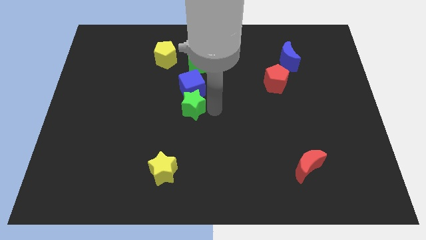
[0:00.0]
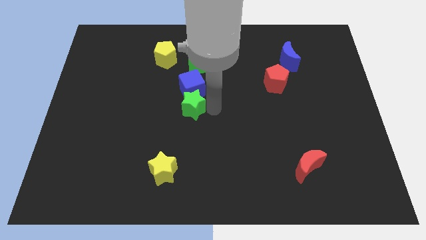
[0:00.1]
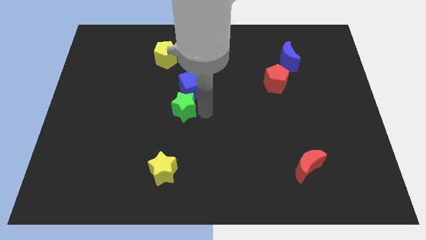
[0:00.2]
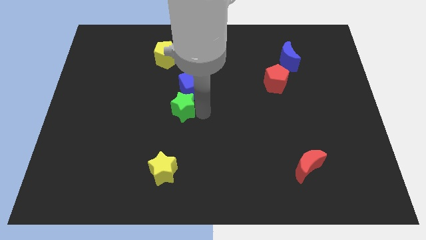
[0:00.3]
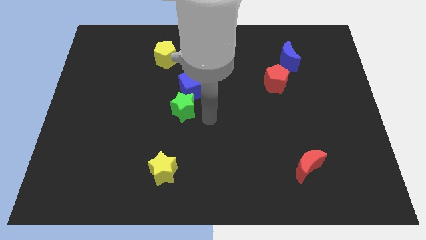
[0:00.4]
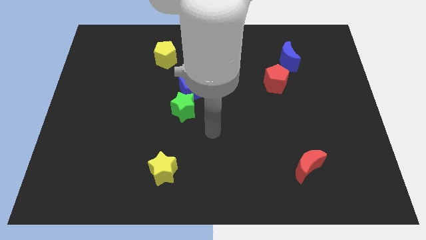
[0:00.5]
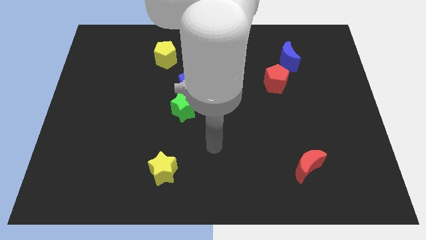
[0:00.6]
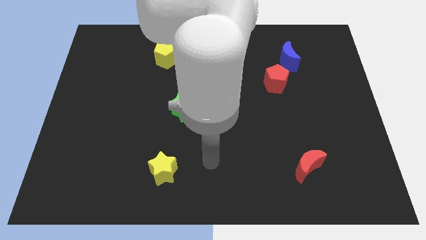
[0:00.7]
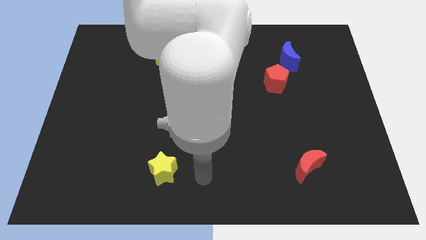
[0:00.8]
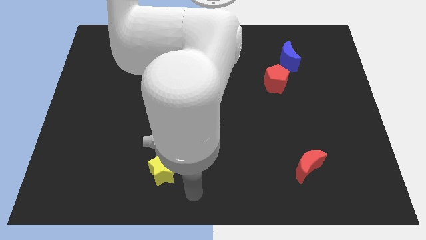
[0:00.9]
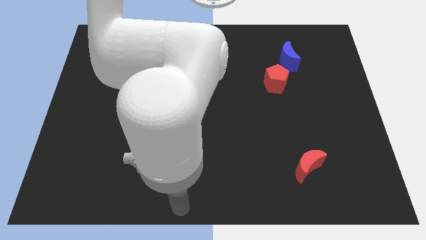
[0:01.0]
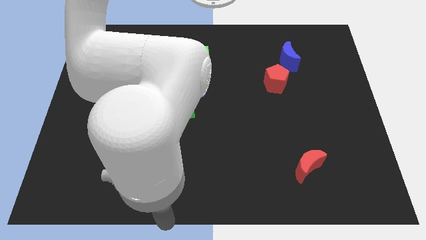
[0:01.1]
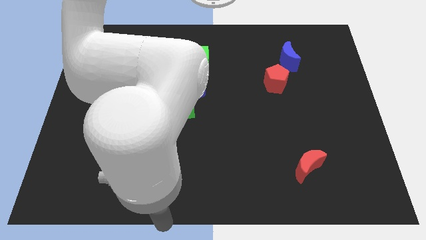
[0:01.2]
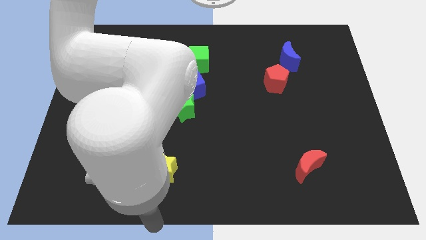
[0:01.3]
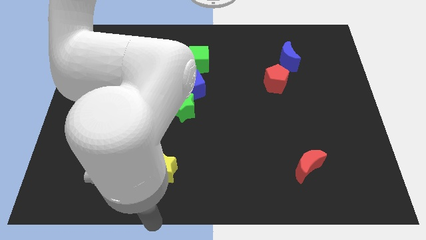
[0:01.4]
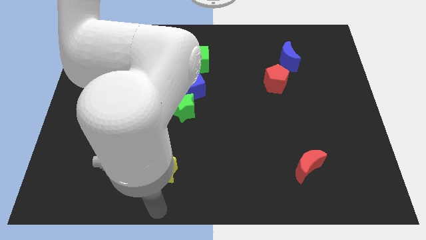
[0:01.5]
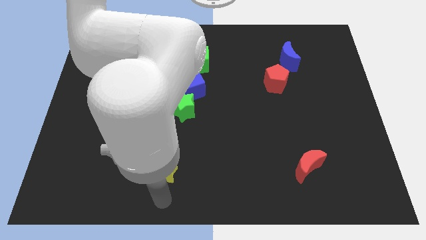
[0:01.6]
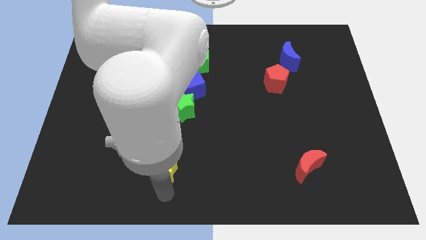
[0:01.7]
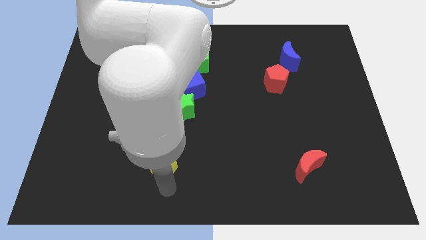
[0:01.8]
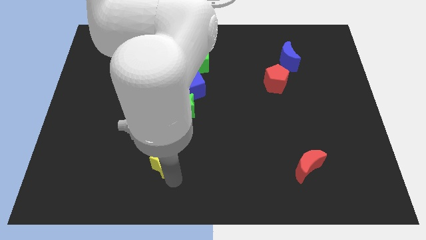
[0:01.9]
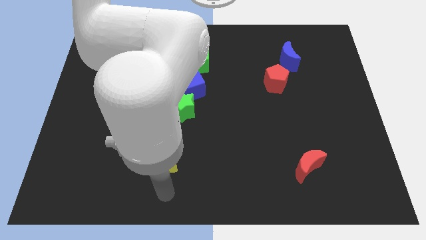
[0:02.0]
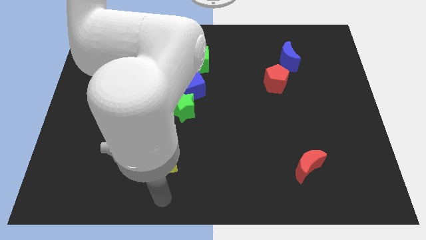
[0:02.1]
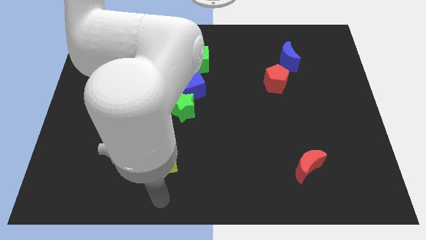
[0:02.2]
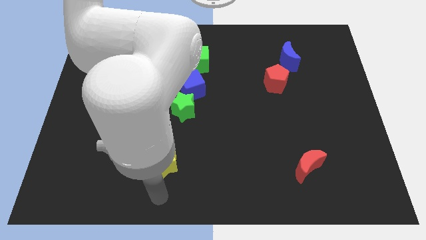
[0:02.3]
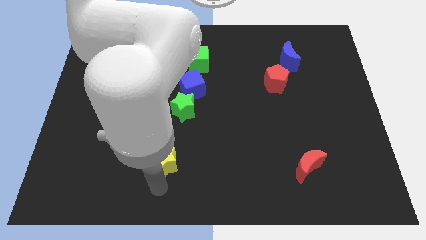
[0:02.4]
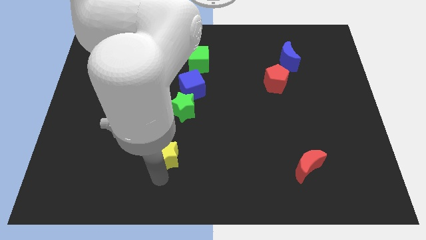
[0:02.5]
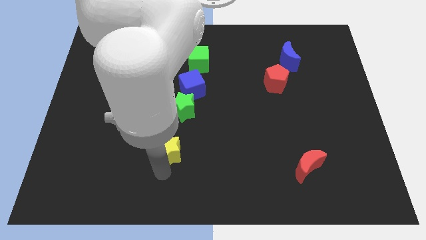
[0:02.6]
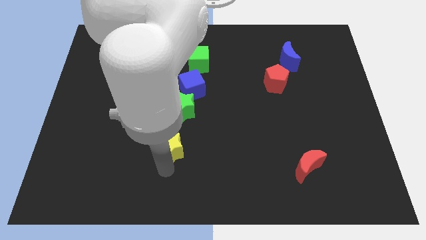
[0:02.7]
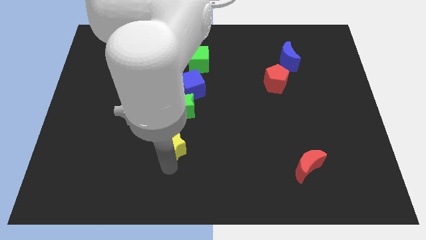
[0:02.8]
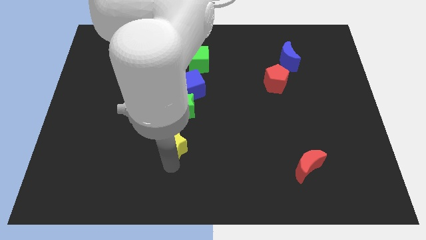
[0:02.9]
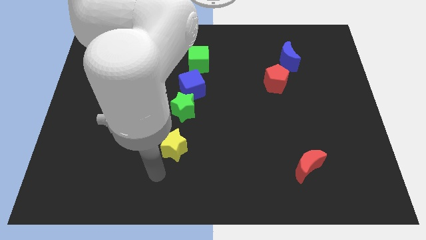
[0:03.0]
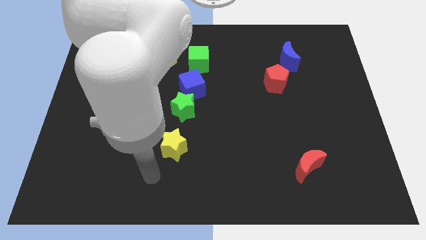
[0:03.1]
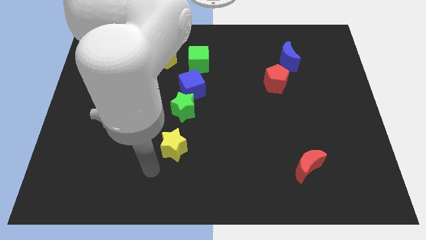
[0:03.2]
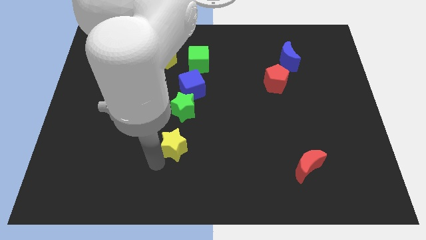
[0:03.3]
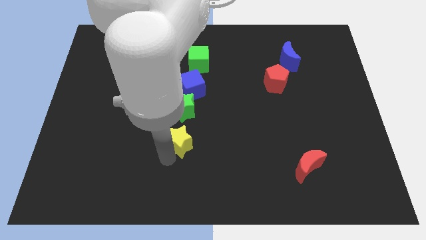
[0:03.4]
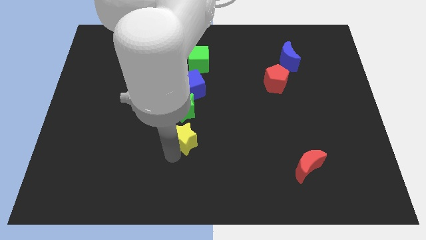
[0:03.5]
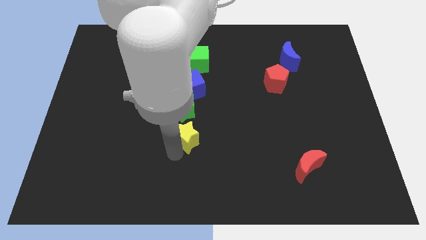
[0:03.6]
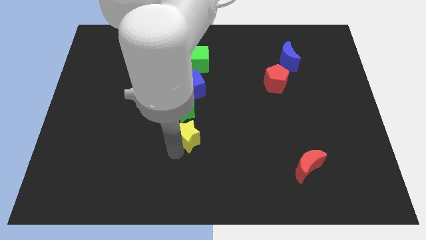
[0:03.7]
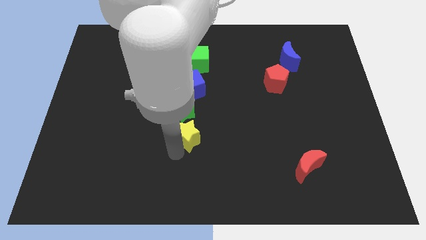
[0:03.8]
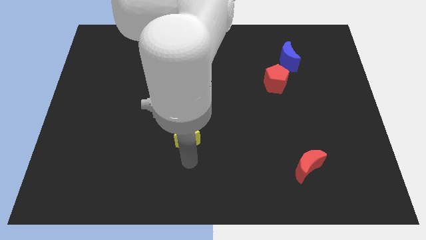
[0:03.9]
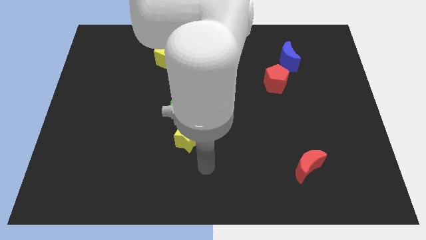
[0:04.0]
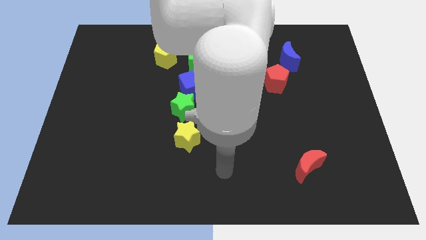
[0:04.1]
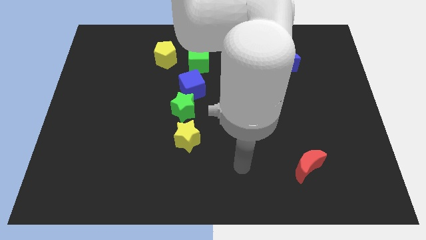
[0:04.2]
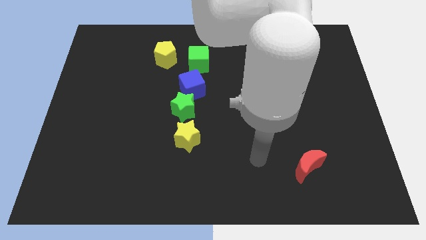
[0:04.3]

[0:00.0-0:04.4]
place the yellow star under the green star

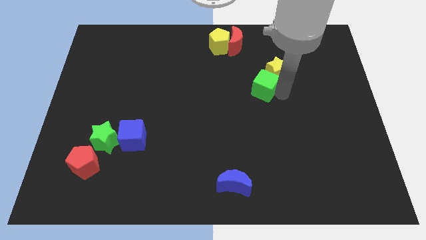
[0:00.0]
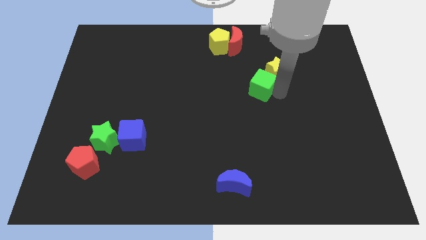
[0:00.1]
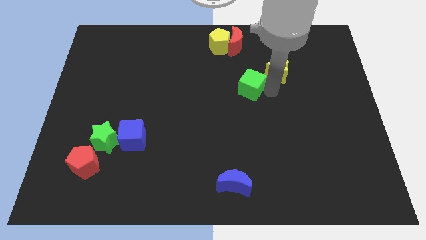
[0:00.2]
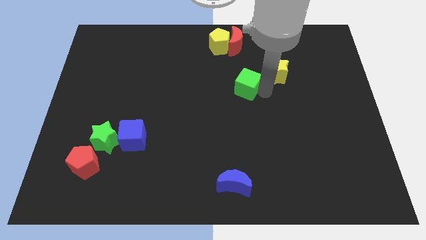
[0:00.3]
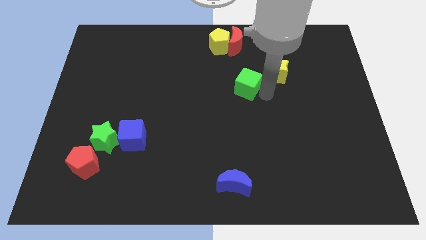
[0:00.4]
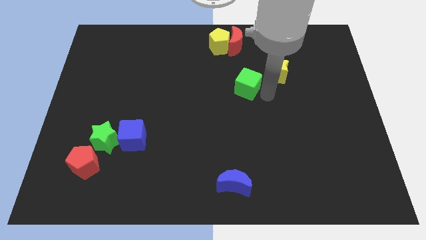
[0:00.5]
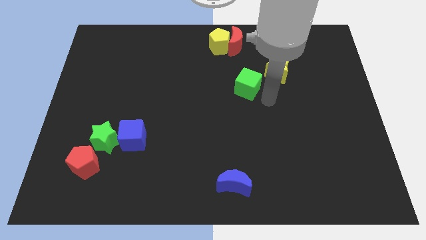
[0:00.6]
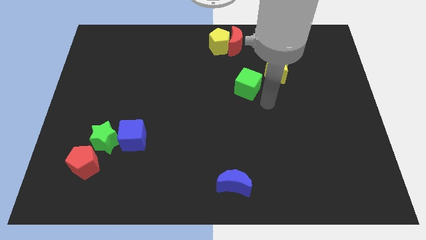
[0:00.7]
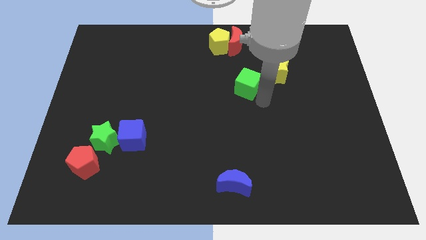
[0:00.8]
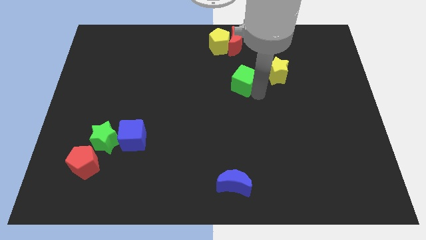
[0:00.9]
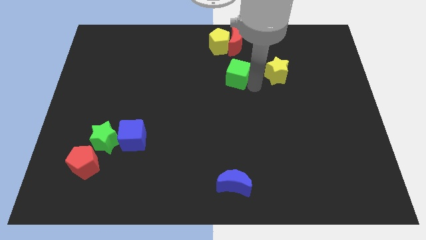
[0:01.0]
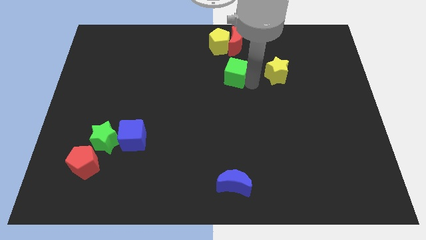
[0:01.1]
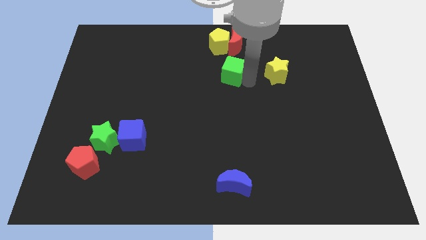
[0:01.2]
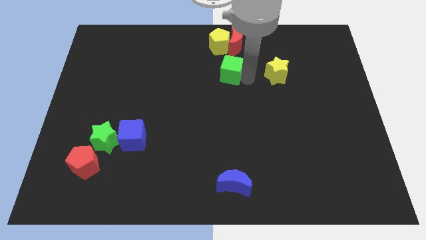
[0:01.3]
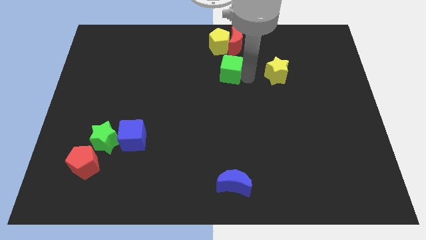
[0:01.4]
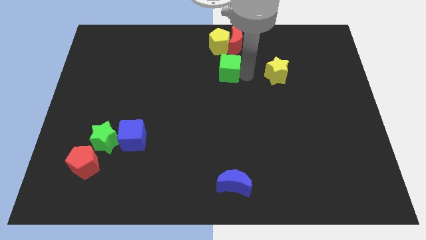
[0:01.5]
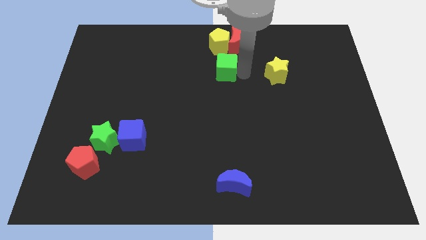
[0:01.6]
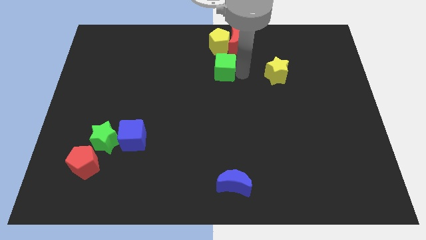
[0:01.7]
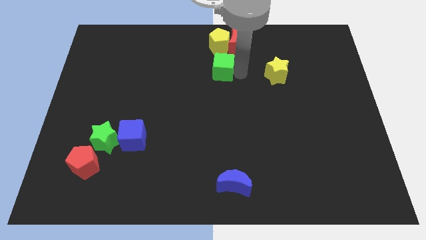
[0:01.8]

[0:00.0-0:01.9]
place the green cube below the yellow pentagon

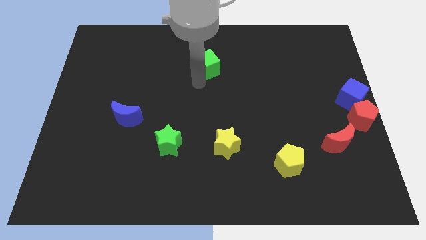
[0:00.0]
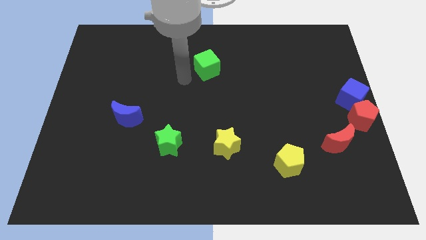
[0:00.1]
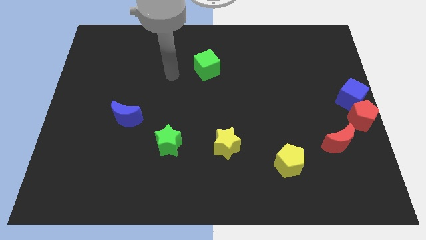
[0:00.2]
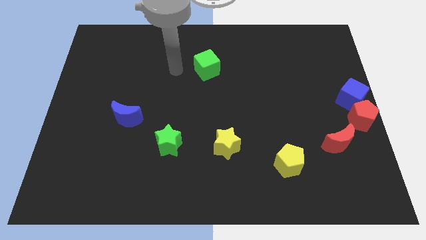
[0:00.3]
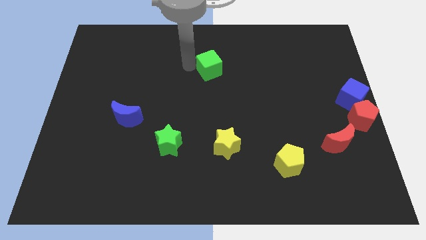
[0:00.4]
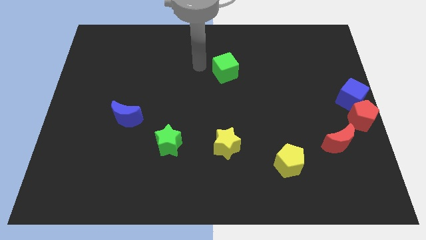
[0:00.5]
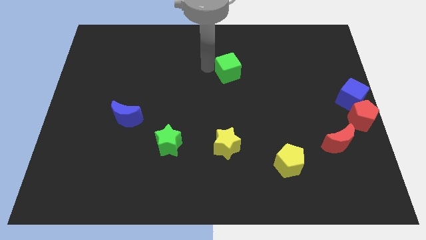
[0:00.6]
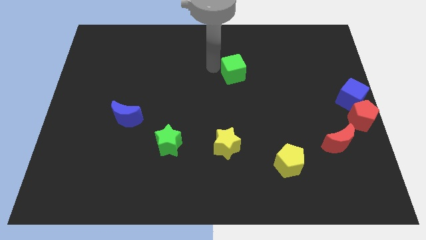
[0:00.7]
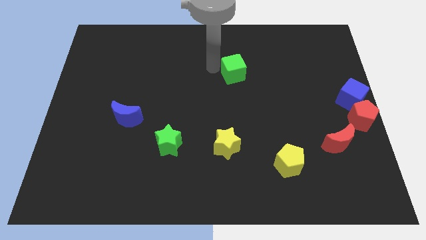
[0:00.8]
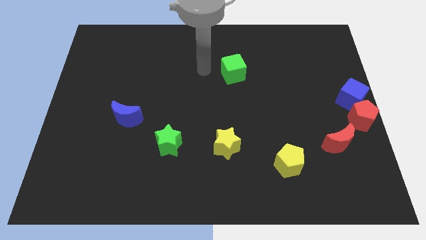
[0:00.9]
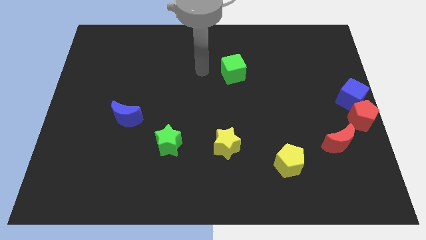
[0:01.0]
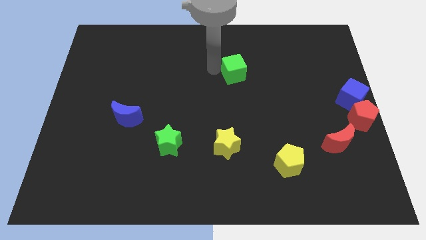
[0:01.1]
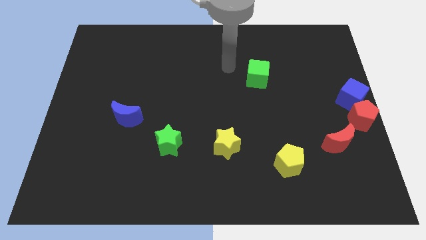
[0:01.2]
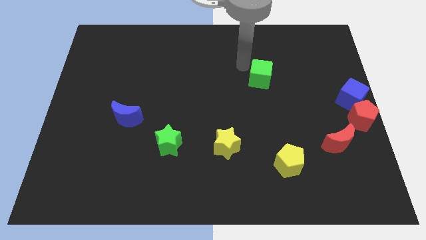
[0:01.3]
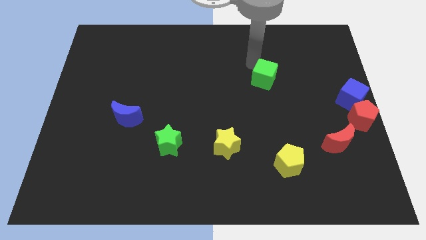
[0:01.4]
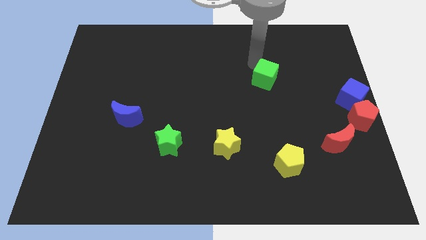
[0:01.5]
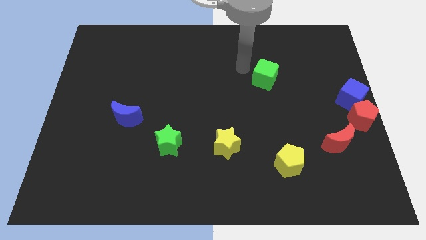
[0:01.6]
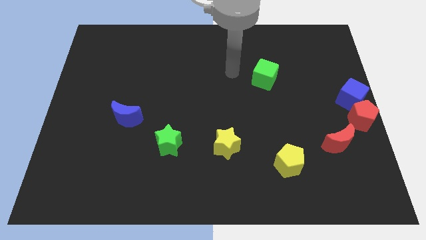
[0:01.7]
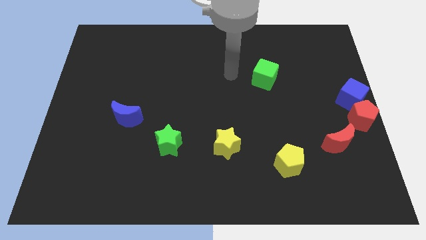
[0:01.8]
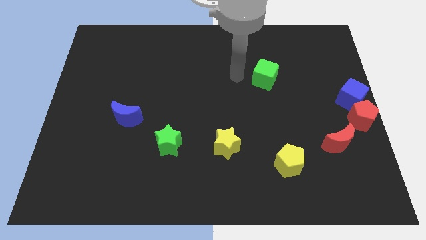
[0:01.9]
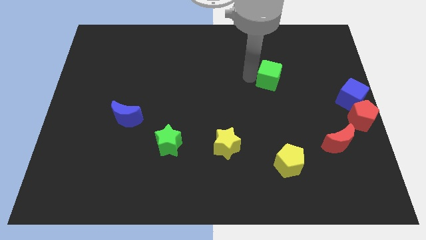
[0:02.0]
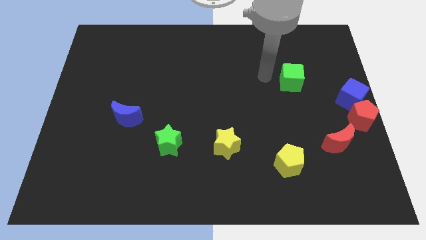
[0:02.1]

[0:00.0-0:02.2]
drag green cube parallel to the top of the yellow pentagon

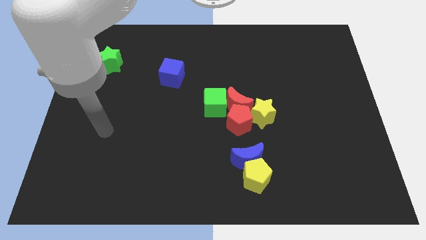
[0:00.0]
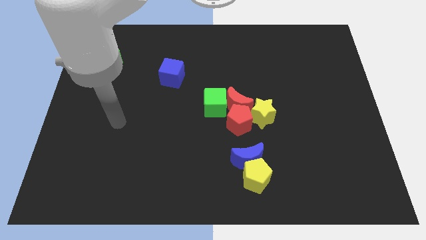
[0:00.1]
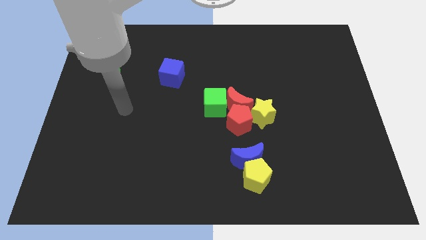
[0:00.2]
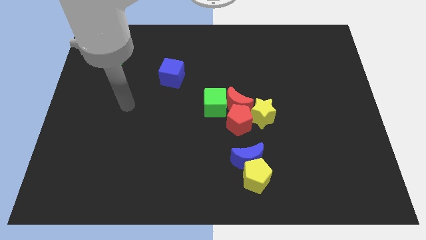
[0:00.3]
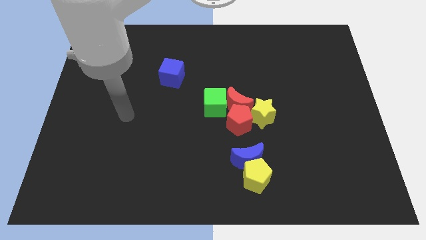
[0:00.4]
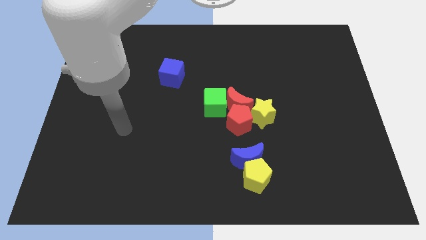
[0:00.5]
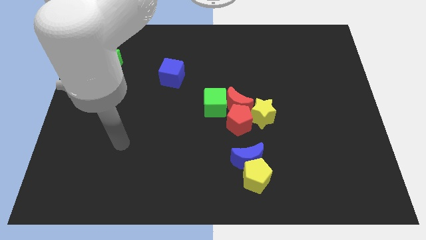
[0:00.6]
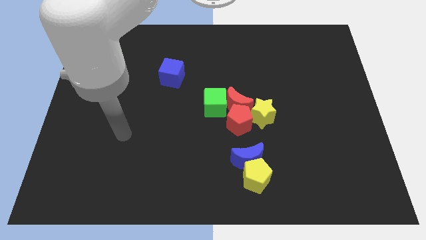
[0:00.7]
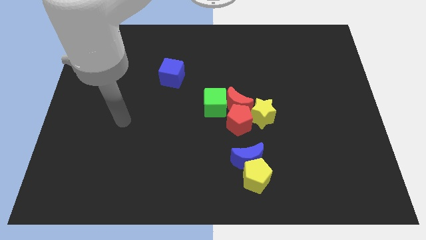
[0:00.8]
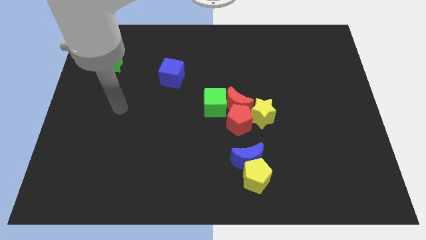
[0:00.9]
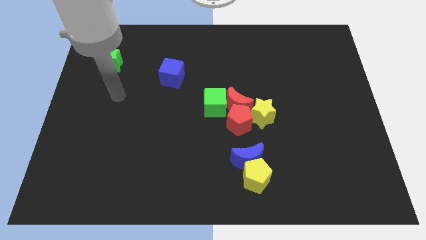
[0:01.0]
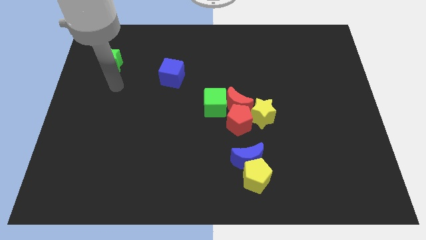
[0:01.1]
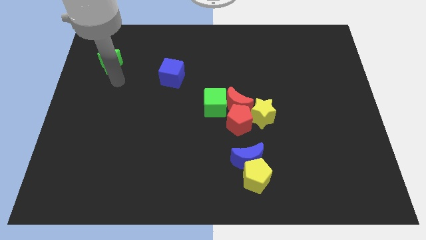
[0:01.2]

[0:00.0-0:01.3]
point your arm at the bottom of the green star
